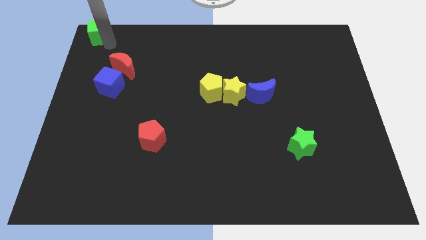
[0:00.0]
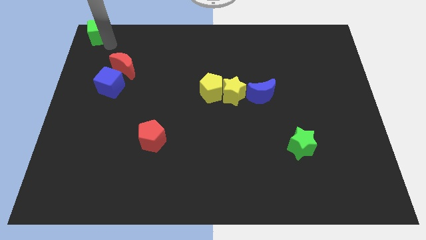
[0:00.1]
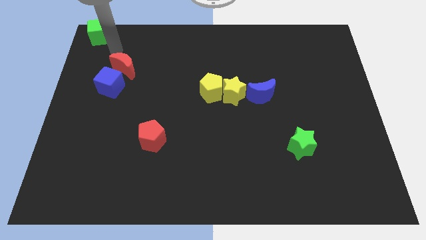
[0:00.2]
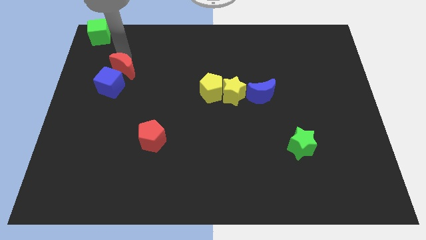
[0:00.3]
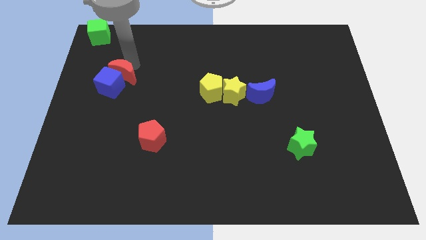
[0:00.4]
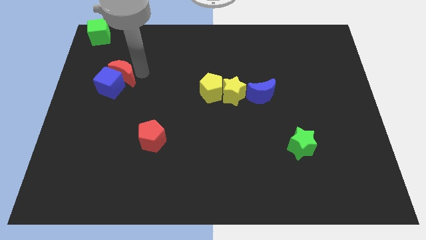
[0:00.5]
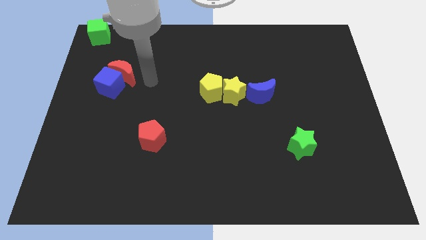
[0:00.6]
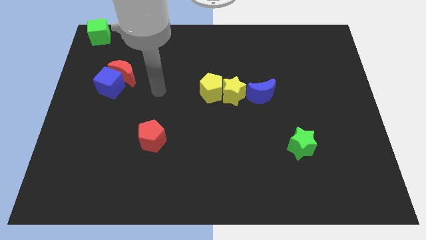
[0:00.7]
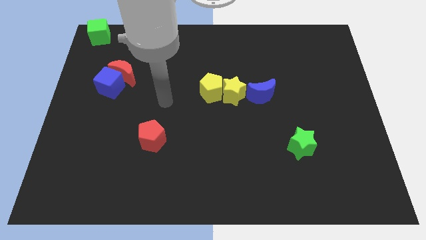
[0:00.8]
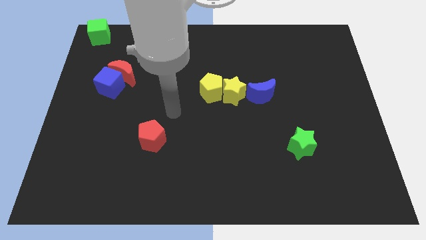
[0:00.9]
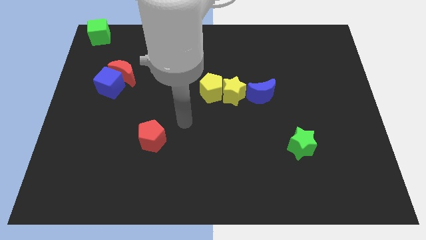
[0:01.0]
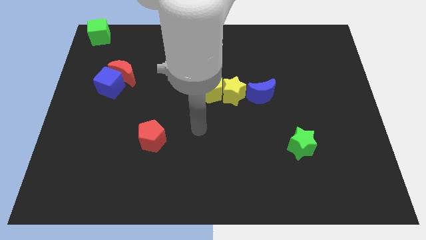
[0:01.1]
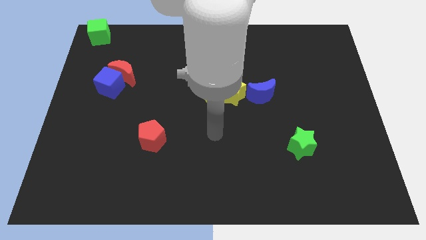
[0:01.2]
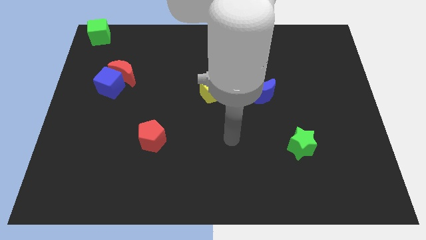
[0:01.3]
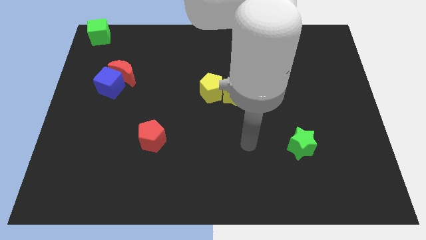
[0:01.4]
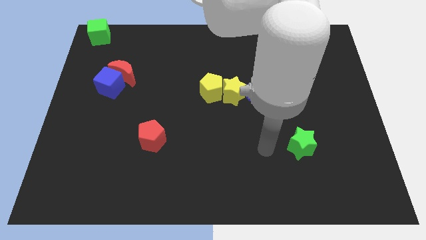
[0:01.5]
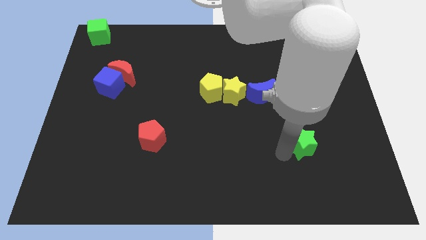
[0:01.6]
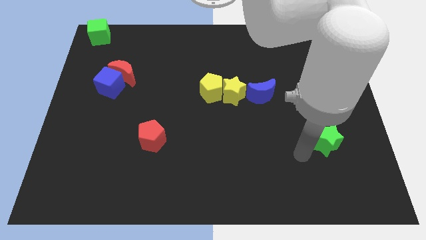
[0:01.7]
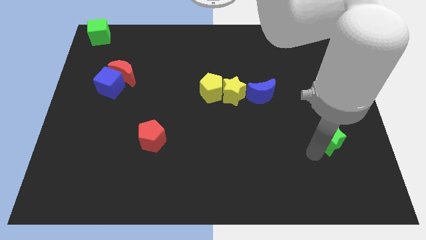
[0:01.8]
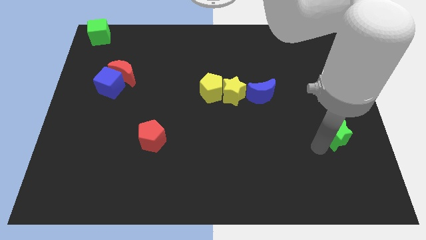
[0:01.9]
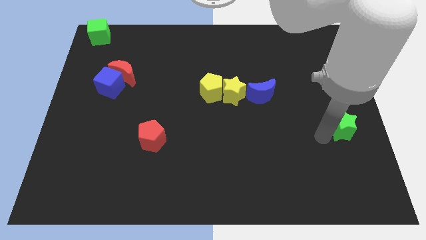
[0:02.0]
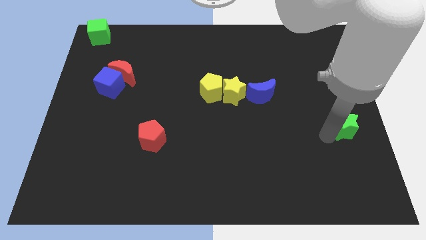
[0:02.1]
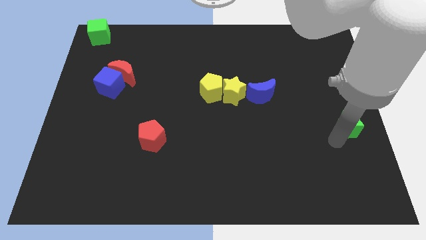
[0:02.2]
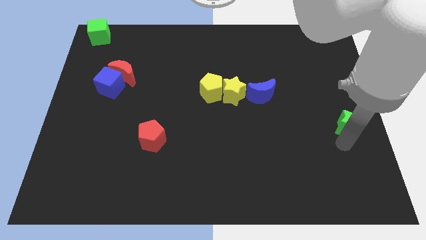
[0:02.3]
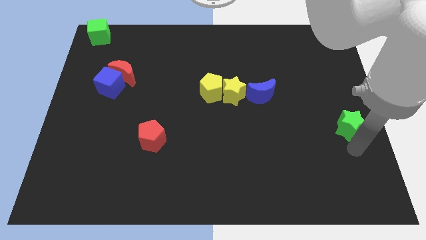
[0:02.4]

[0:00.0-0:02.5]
push the red moon into a blue cube

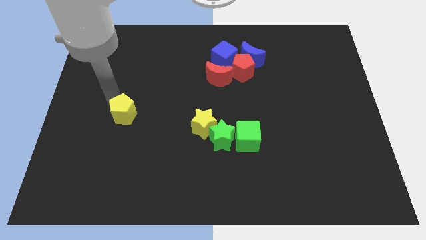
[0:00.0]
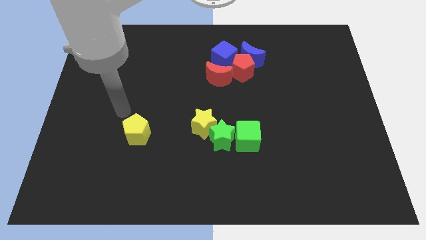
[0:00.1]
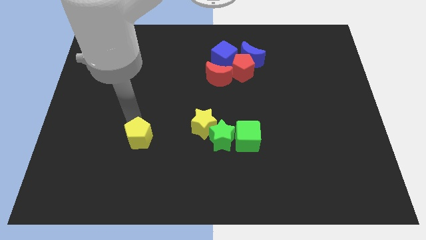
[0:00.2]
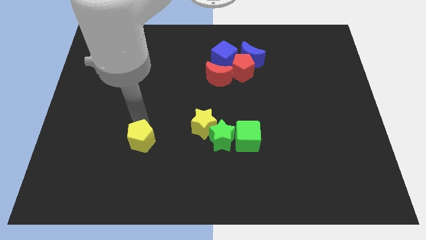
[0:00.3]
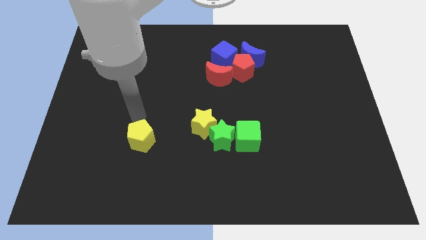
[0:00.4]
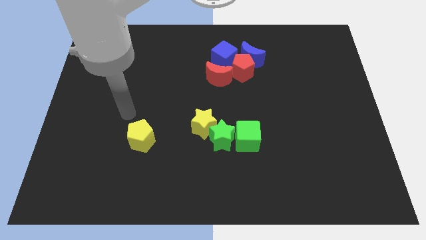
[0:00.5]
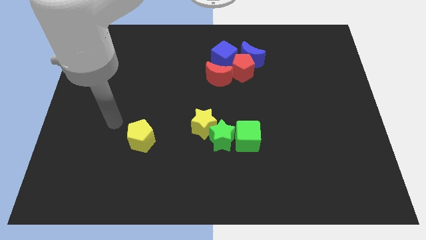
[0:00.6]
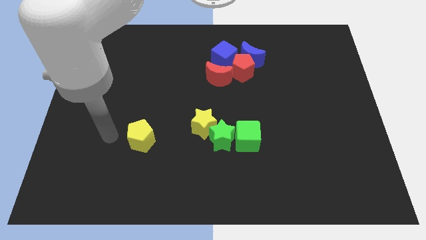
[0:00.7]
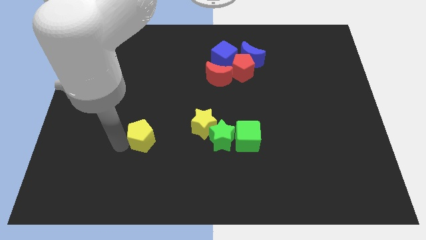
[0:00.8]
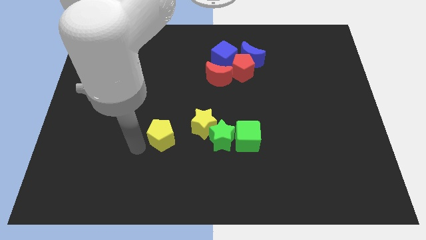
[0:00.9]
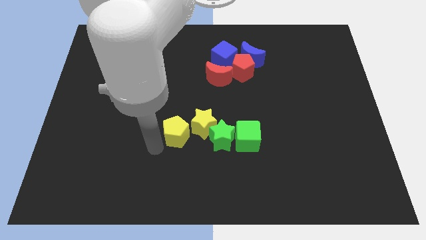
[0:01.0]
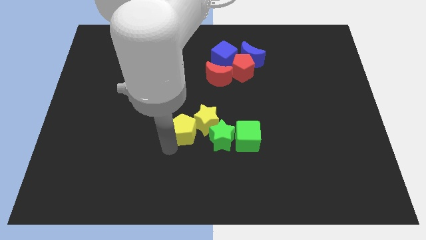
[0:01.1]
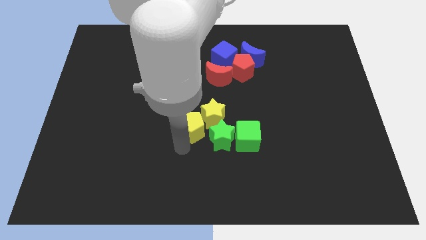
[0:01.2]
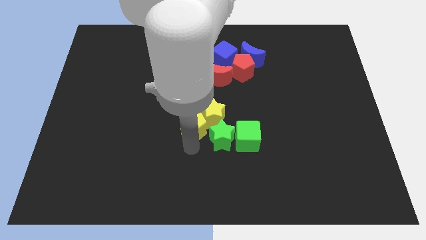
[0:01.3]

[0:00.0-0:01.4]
place yellow pentagon below yellow star

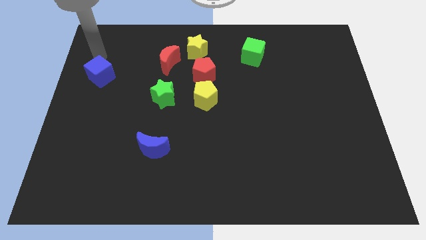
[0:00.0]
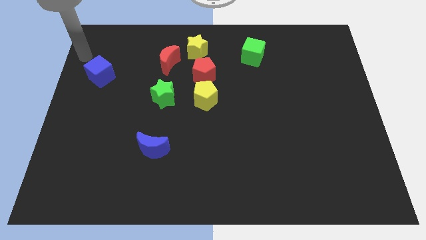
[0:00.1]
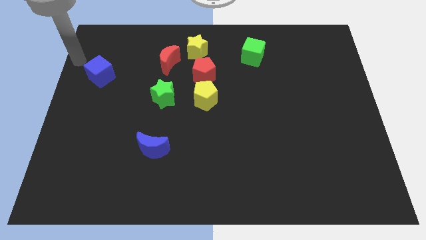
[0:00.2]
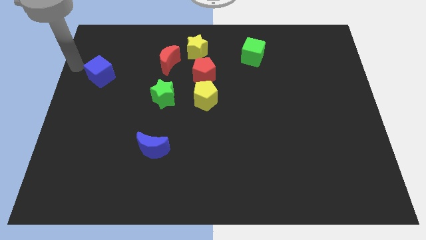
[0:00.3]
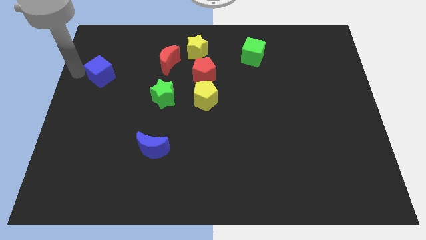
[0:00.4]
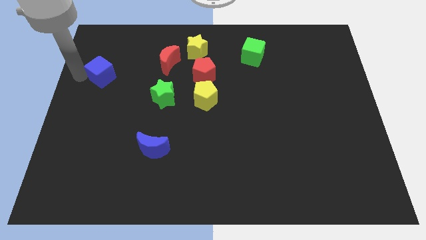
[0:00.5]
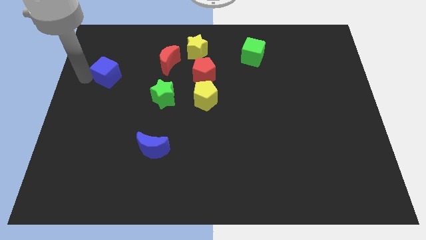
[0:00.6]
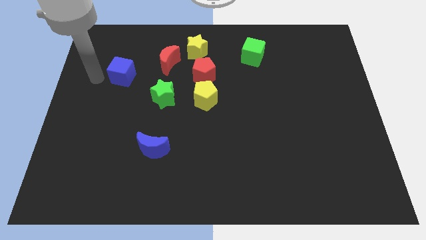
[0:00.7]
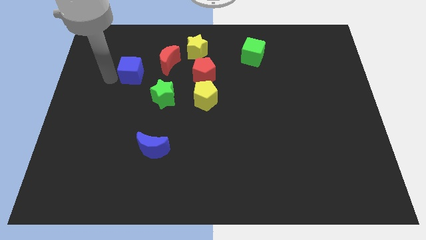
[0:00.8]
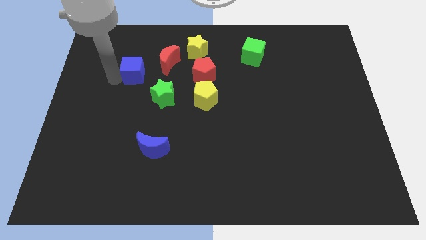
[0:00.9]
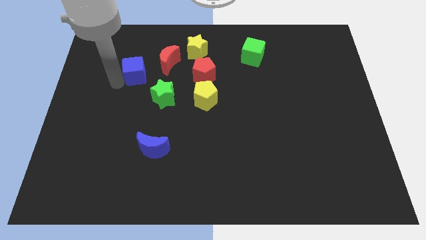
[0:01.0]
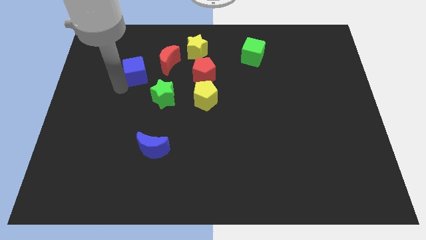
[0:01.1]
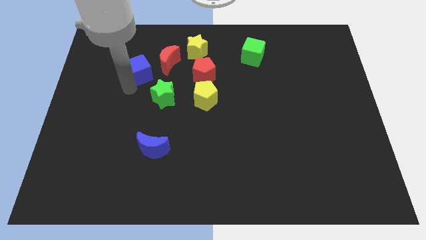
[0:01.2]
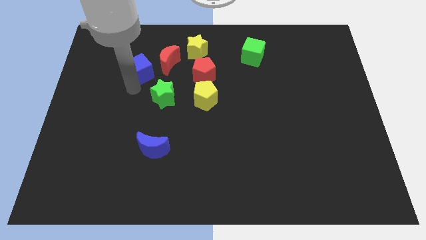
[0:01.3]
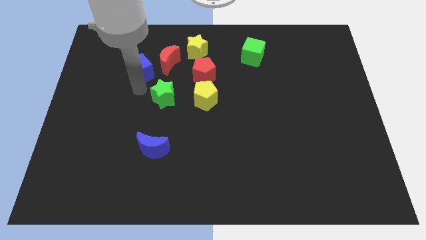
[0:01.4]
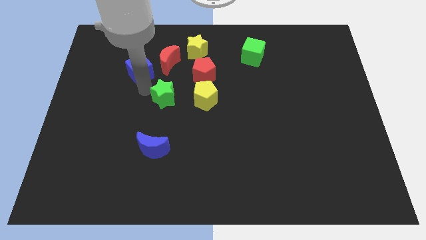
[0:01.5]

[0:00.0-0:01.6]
place the blue cube diagonal above the green star

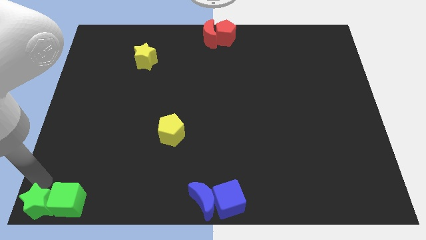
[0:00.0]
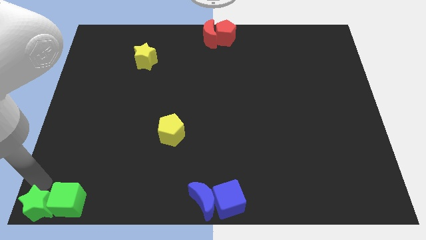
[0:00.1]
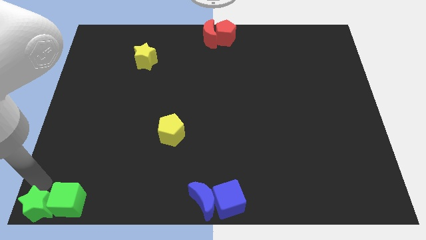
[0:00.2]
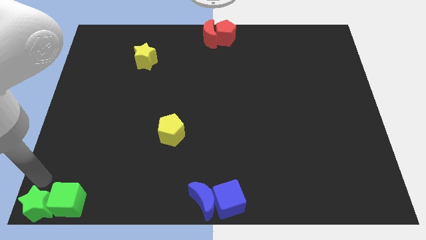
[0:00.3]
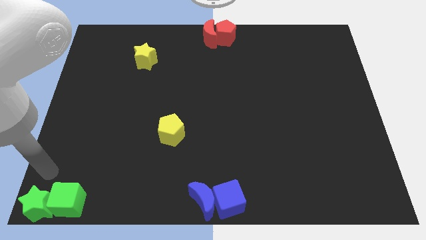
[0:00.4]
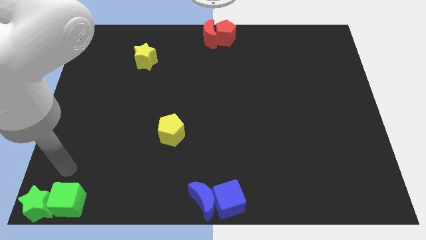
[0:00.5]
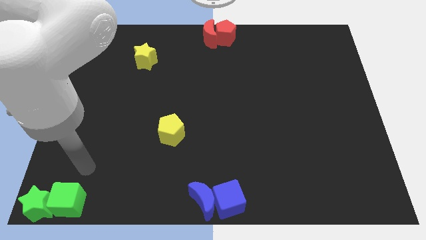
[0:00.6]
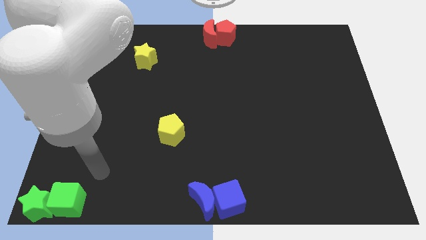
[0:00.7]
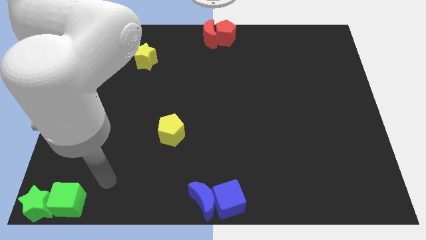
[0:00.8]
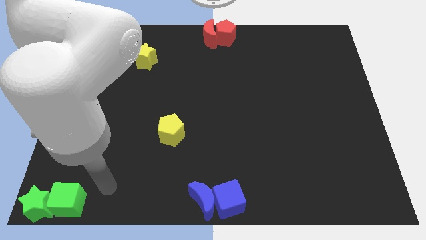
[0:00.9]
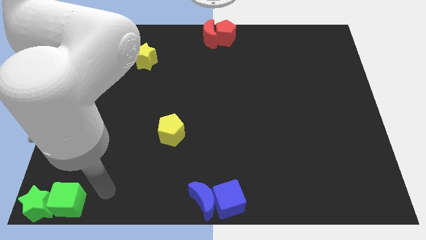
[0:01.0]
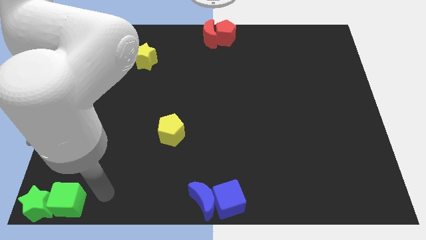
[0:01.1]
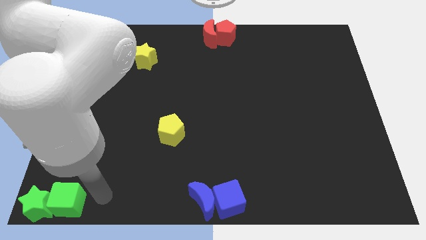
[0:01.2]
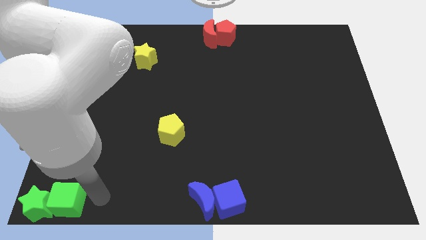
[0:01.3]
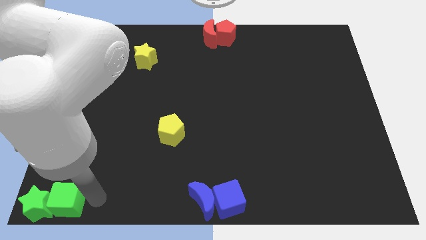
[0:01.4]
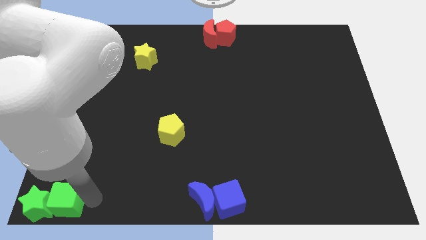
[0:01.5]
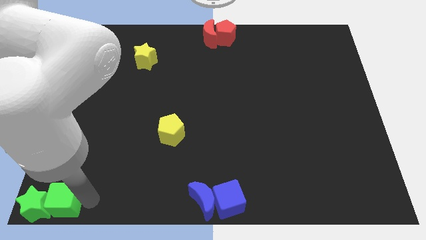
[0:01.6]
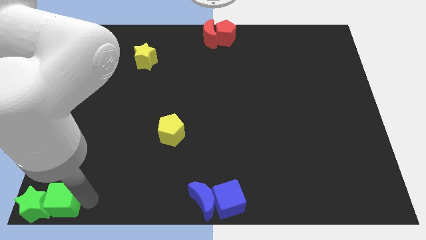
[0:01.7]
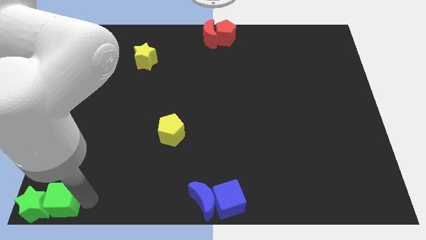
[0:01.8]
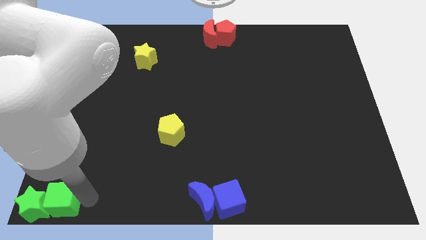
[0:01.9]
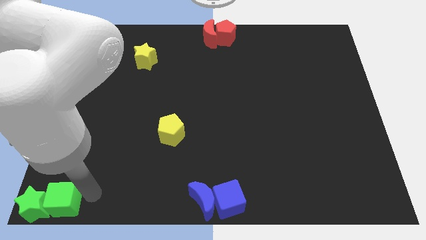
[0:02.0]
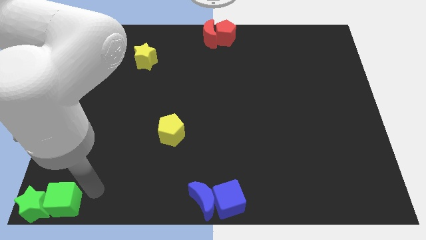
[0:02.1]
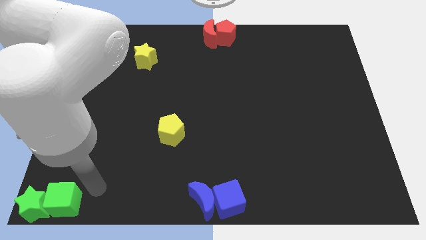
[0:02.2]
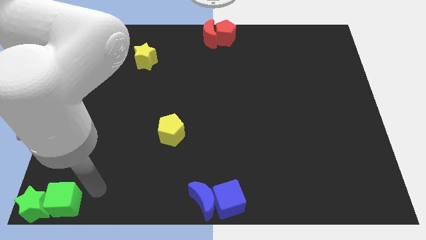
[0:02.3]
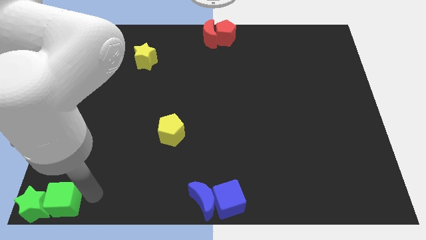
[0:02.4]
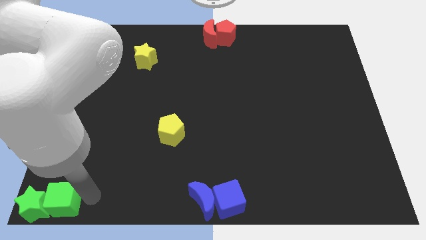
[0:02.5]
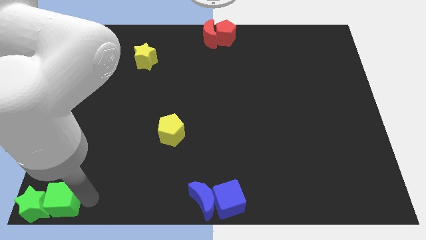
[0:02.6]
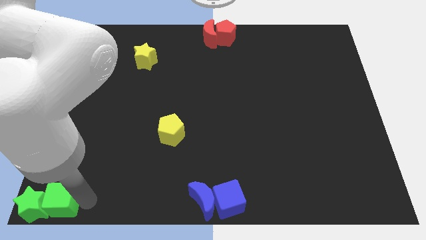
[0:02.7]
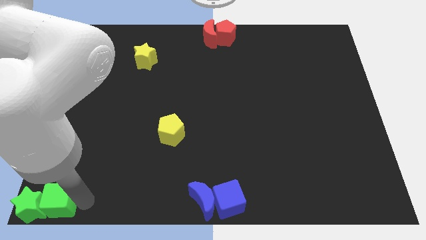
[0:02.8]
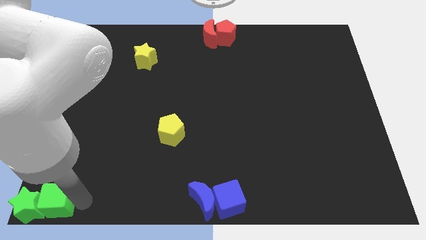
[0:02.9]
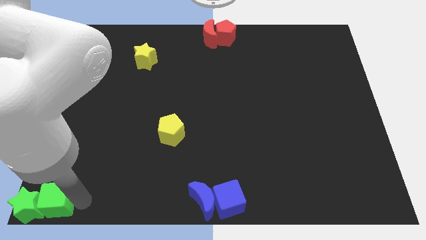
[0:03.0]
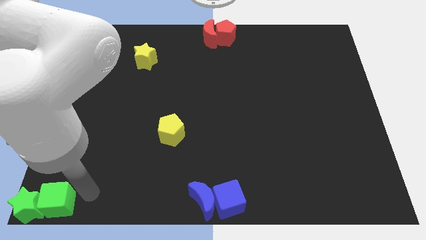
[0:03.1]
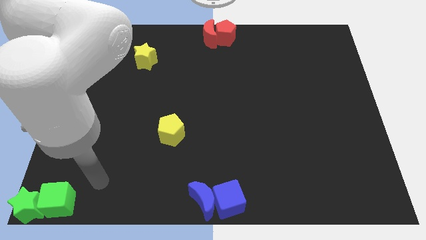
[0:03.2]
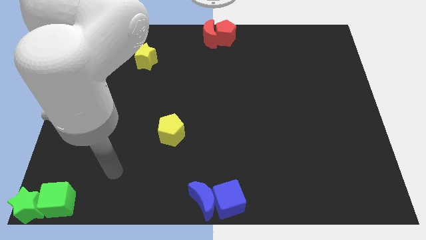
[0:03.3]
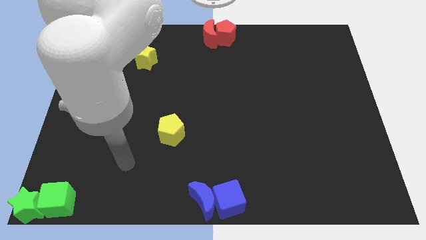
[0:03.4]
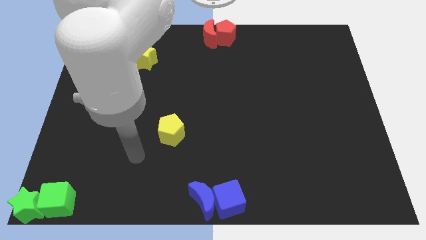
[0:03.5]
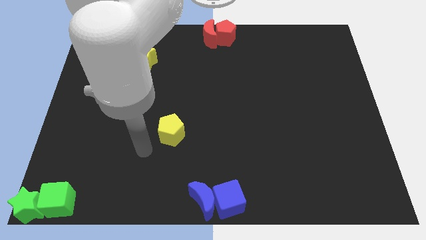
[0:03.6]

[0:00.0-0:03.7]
slightly push green blocks towards left
